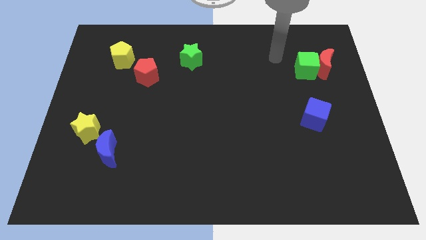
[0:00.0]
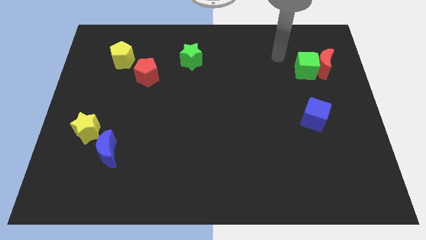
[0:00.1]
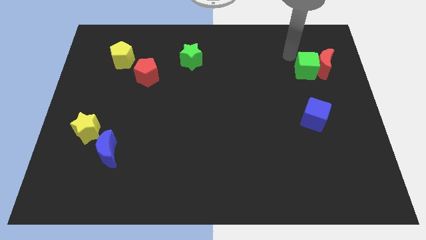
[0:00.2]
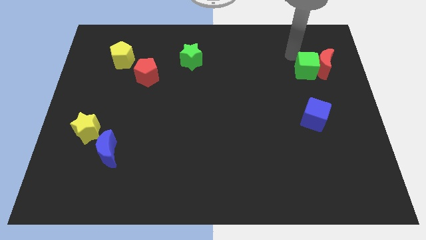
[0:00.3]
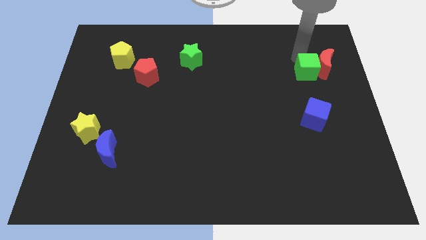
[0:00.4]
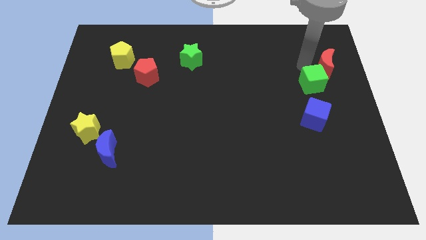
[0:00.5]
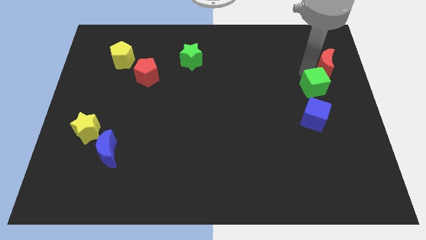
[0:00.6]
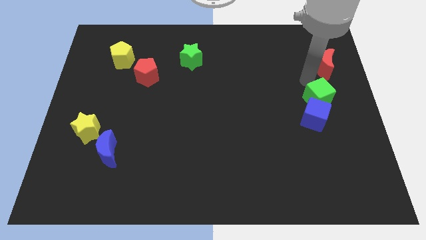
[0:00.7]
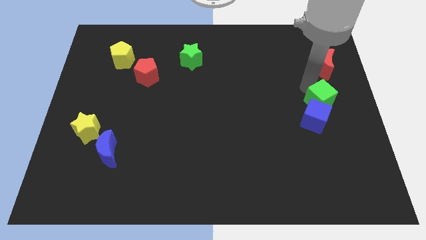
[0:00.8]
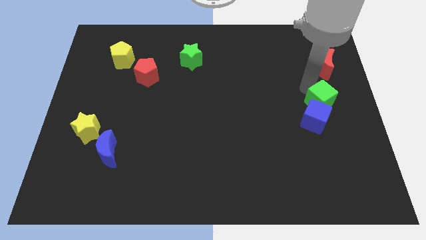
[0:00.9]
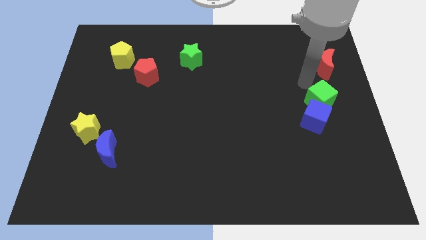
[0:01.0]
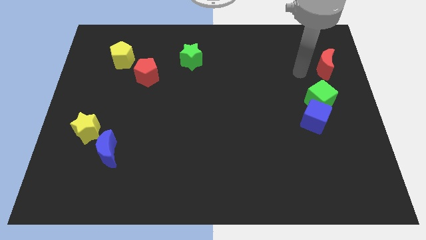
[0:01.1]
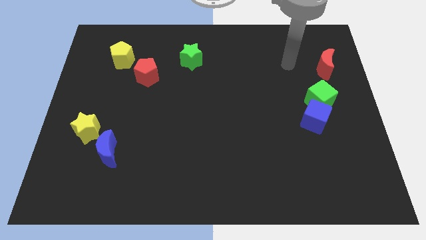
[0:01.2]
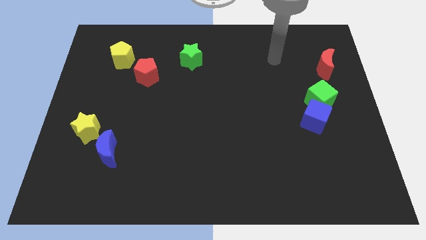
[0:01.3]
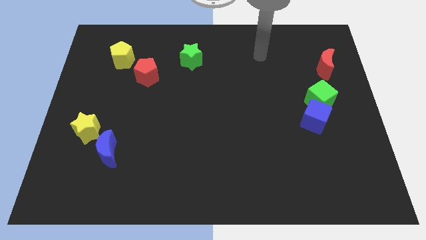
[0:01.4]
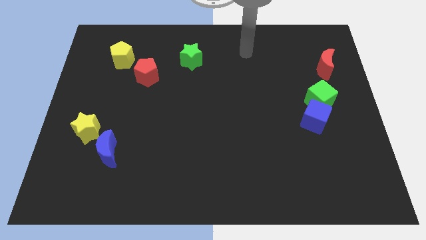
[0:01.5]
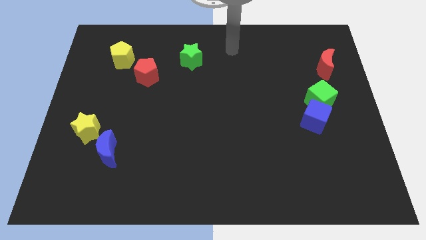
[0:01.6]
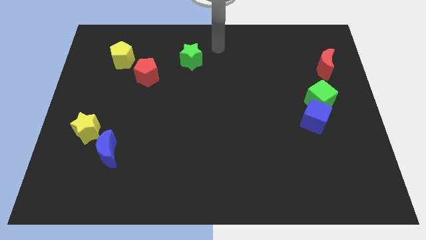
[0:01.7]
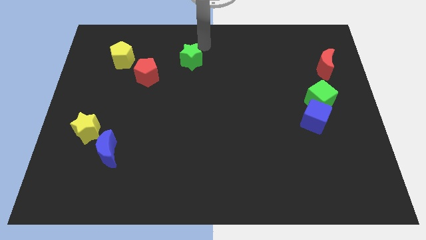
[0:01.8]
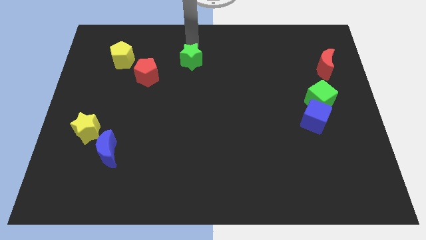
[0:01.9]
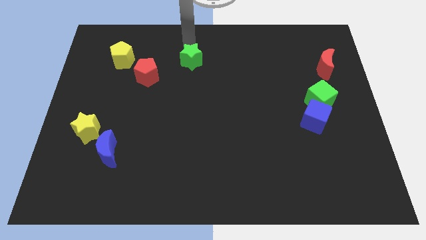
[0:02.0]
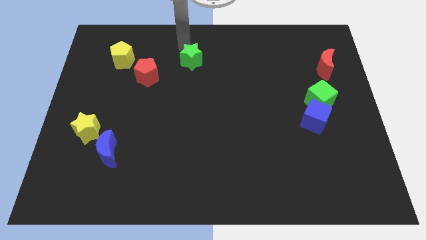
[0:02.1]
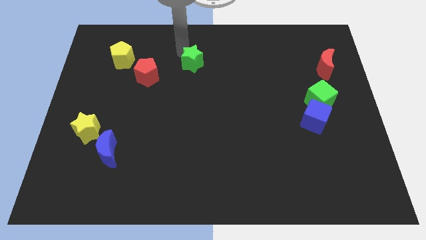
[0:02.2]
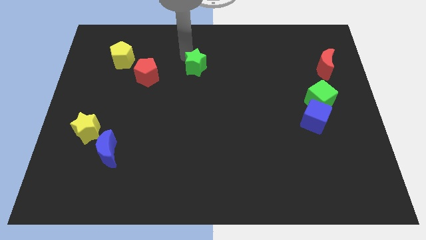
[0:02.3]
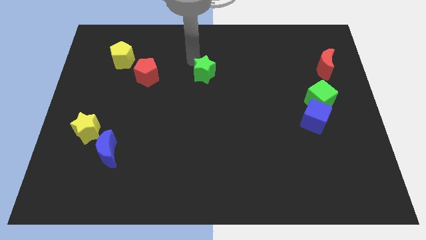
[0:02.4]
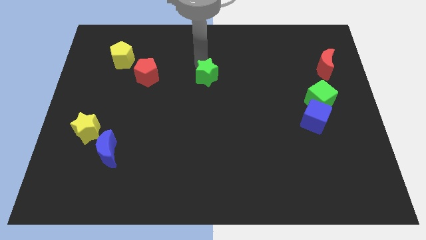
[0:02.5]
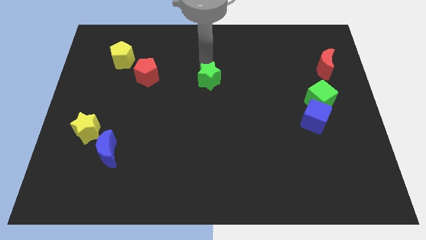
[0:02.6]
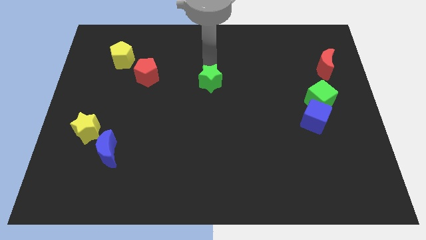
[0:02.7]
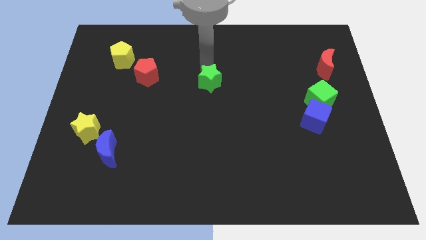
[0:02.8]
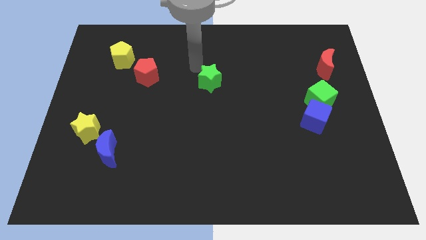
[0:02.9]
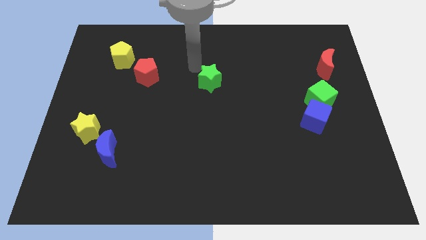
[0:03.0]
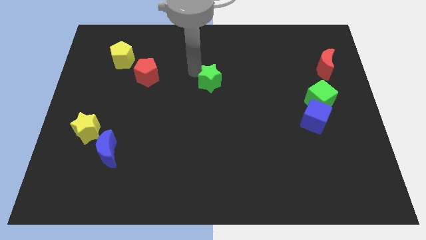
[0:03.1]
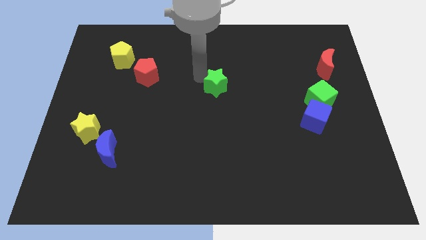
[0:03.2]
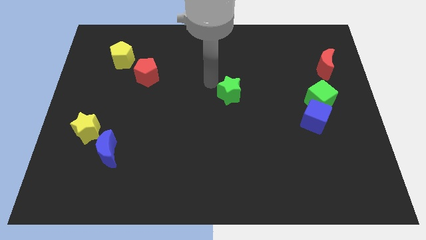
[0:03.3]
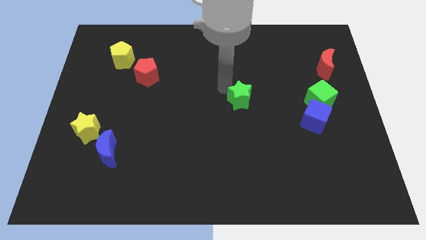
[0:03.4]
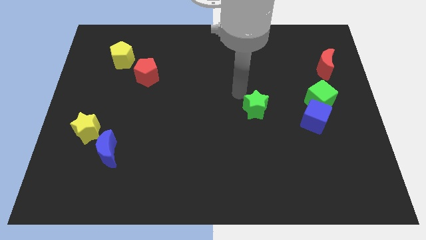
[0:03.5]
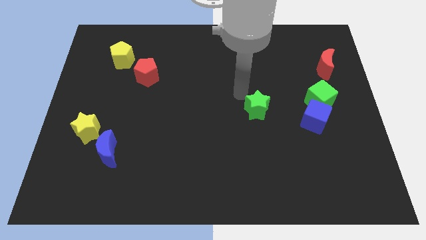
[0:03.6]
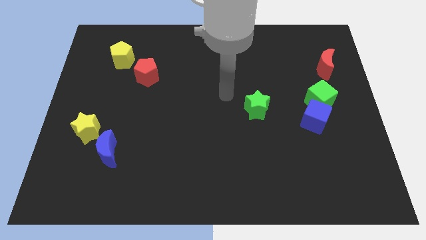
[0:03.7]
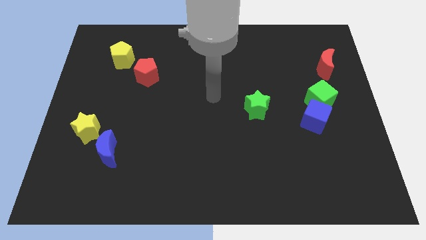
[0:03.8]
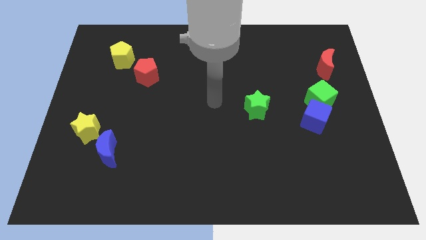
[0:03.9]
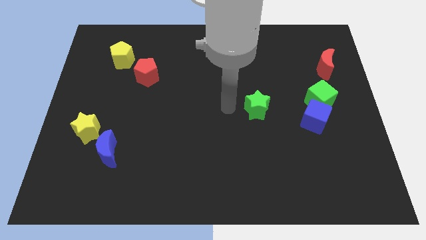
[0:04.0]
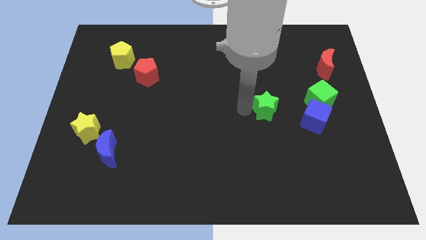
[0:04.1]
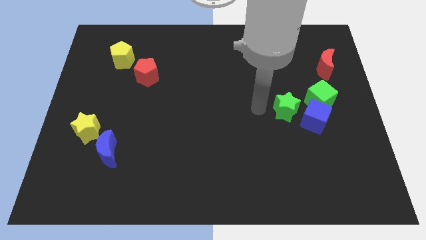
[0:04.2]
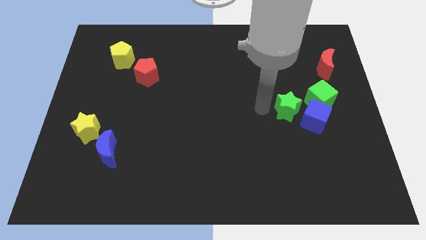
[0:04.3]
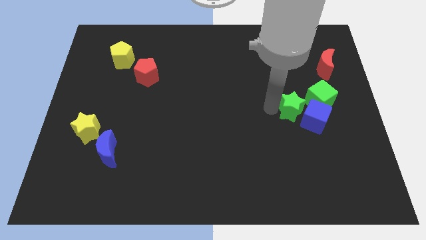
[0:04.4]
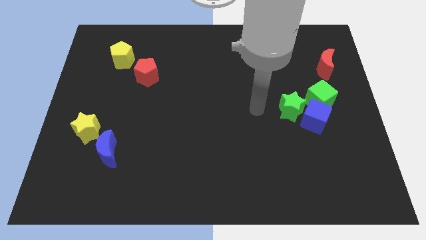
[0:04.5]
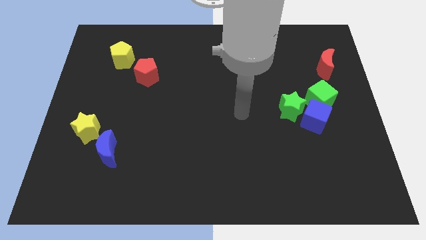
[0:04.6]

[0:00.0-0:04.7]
move the green blocks to the center right

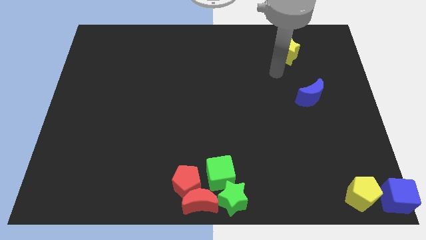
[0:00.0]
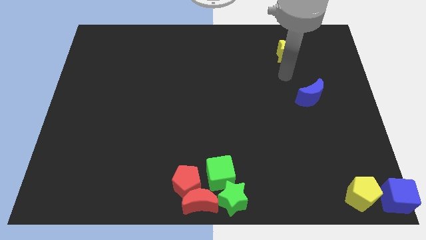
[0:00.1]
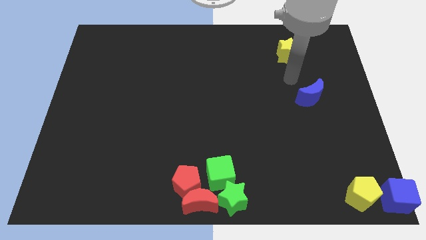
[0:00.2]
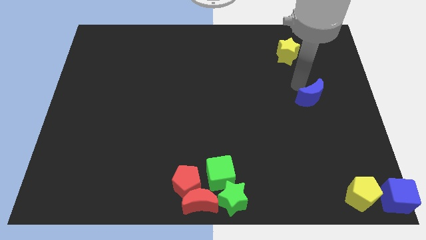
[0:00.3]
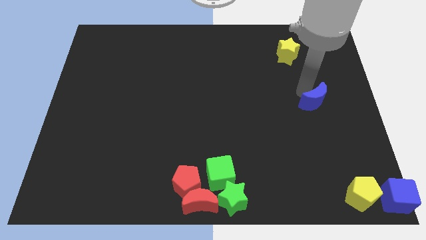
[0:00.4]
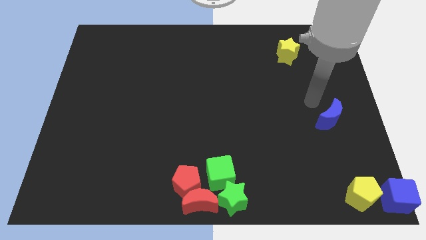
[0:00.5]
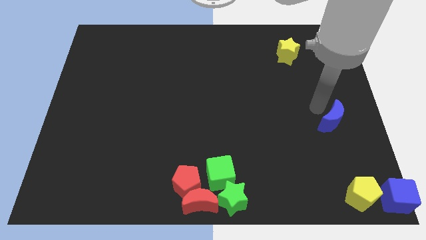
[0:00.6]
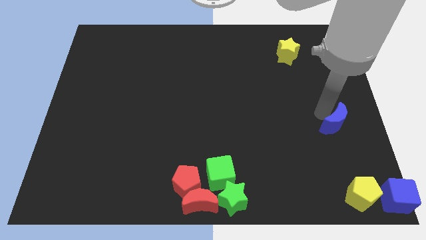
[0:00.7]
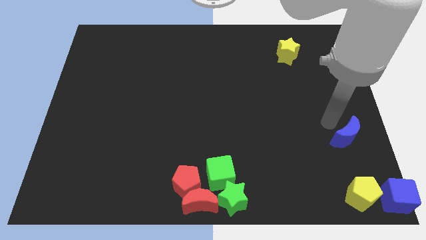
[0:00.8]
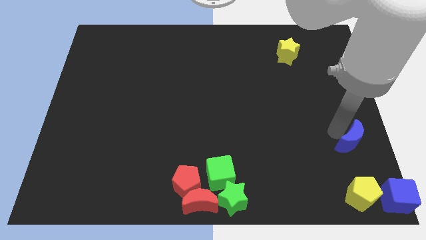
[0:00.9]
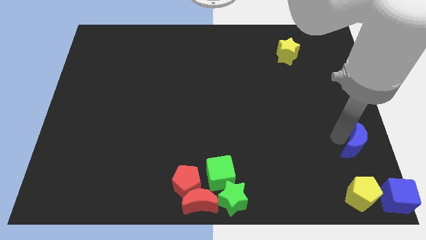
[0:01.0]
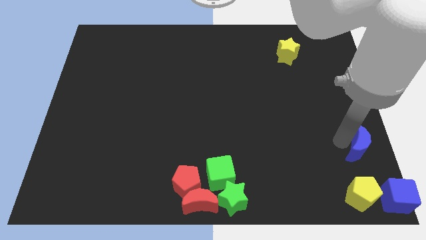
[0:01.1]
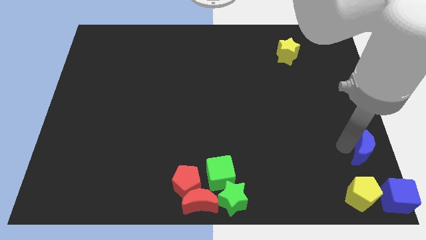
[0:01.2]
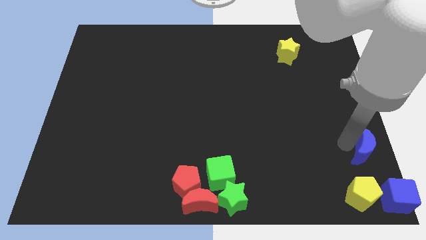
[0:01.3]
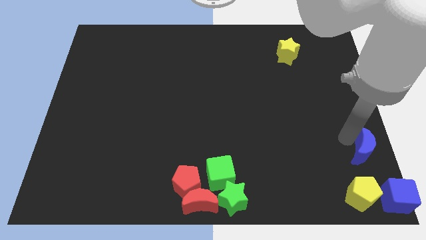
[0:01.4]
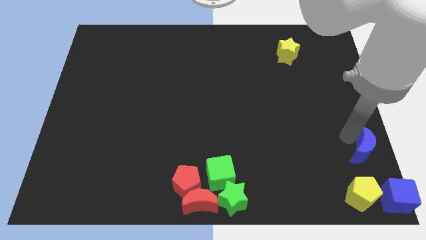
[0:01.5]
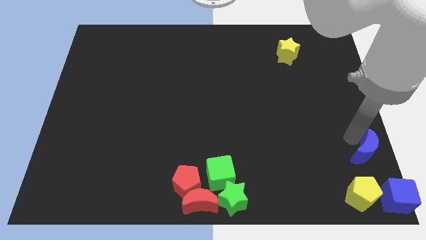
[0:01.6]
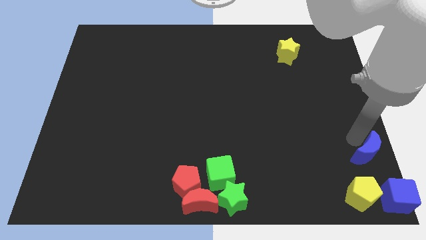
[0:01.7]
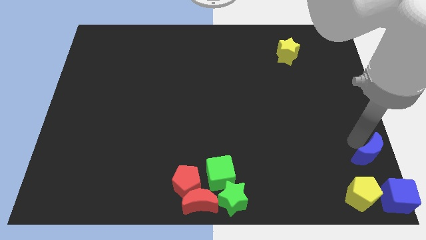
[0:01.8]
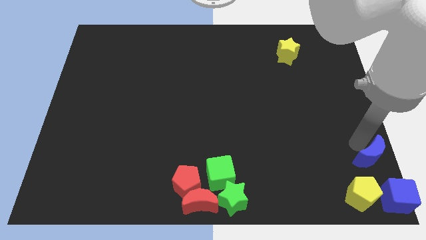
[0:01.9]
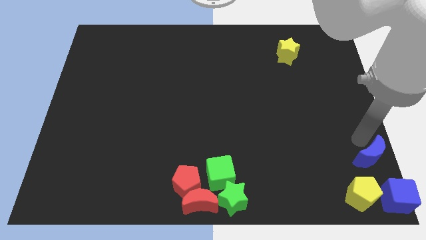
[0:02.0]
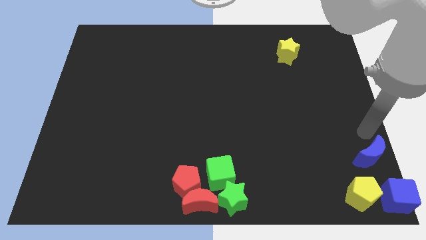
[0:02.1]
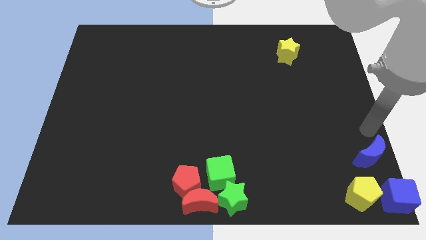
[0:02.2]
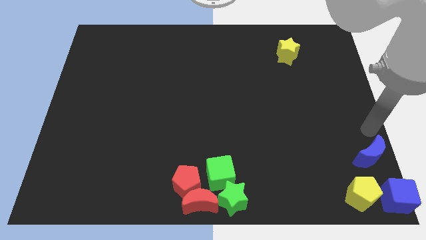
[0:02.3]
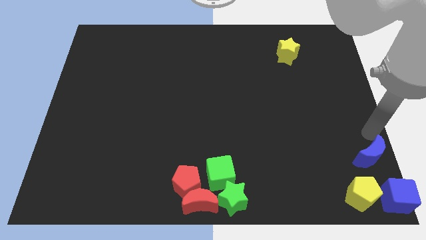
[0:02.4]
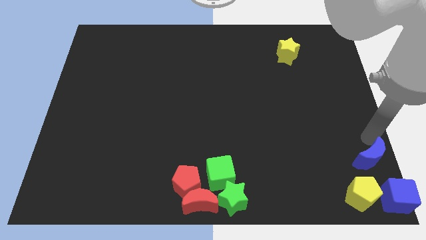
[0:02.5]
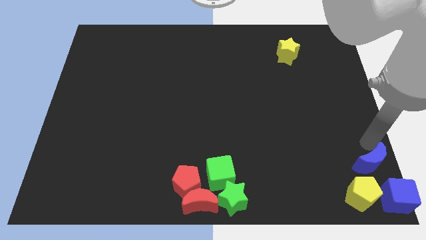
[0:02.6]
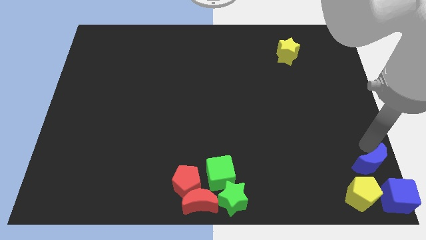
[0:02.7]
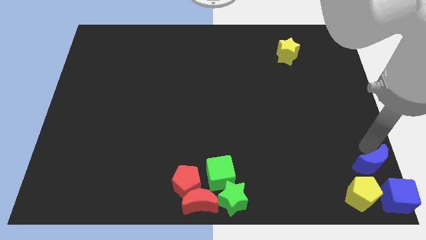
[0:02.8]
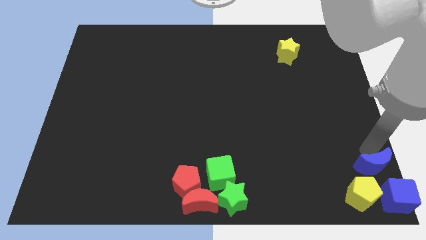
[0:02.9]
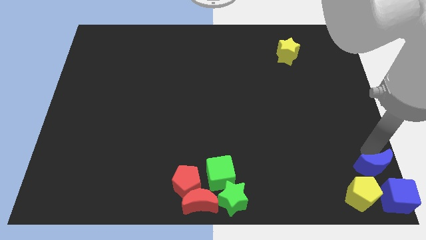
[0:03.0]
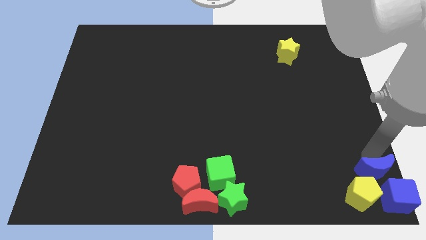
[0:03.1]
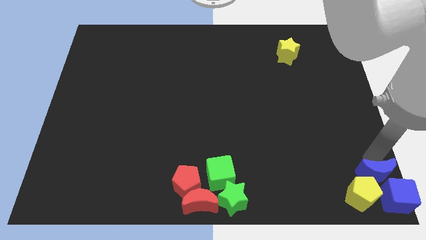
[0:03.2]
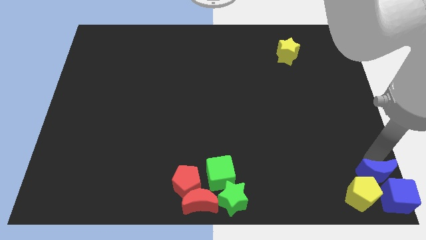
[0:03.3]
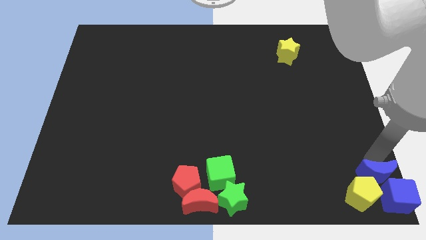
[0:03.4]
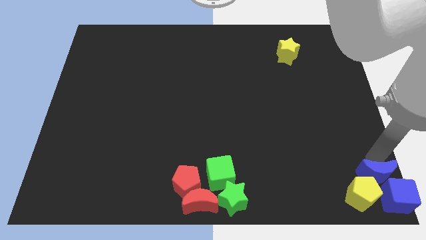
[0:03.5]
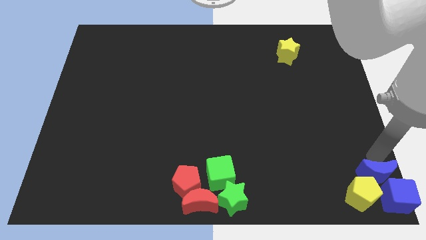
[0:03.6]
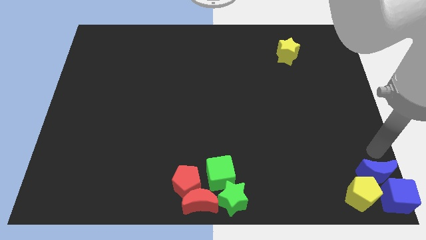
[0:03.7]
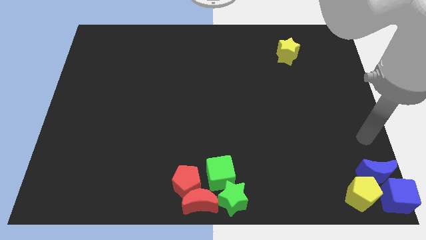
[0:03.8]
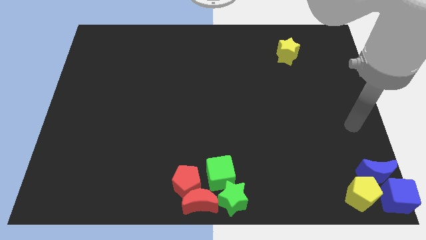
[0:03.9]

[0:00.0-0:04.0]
place the blue moon above the yellow pentagon and the blue cube

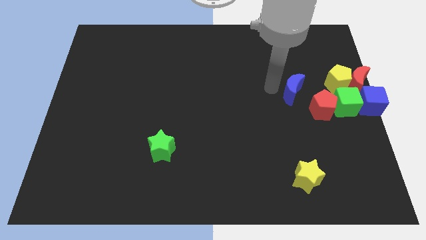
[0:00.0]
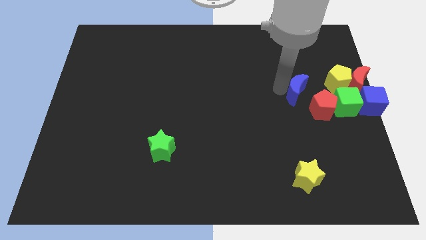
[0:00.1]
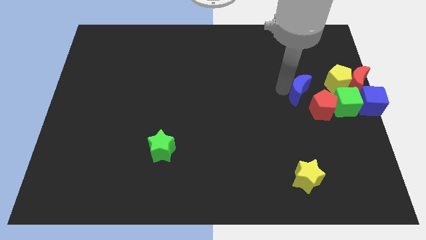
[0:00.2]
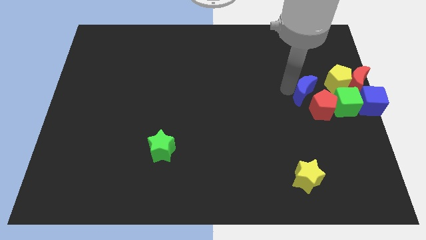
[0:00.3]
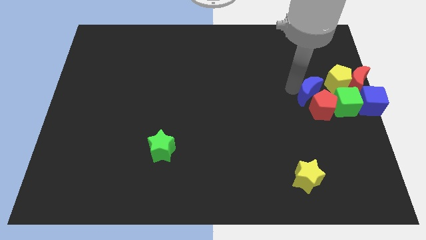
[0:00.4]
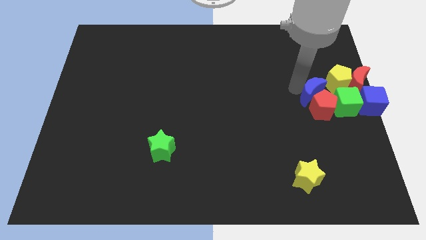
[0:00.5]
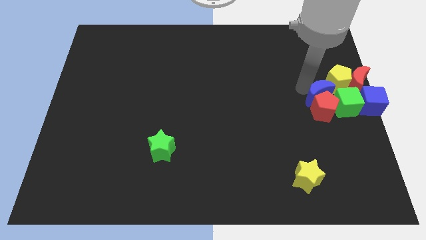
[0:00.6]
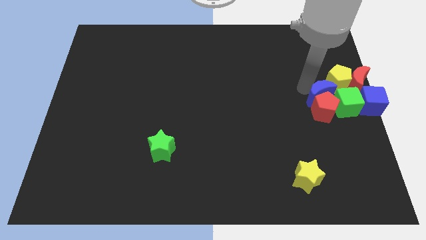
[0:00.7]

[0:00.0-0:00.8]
push blue moon into red pentagon
